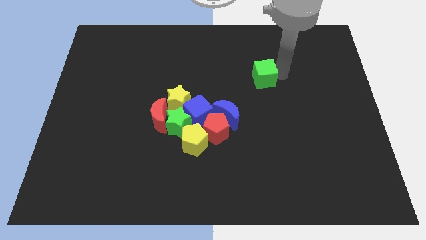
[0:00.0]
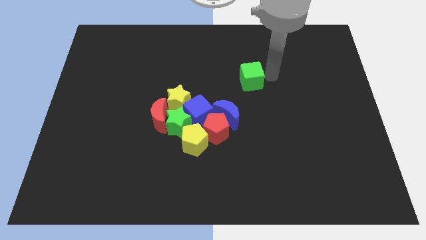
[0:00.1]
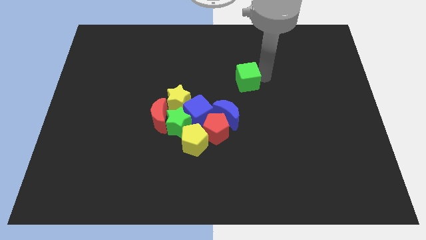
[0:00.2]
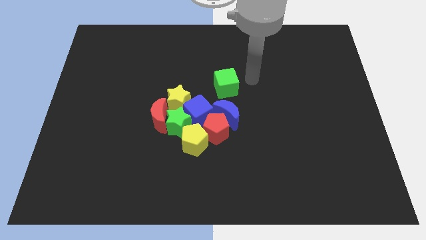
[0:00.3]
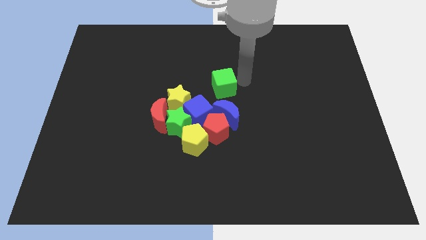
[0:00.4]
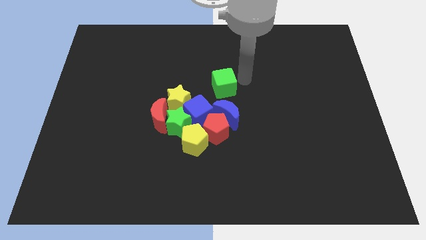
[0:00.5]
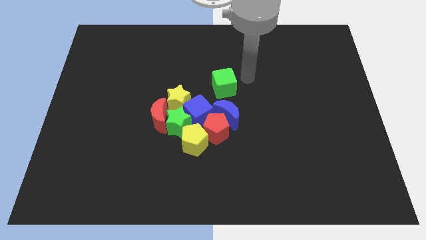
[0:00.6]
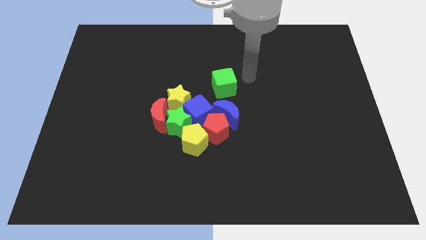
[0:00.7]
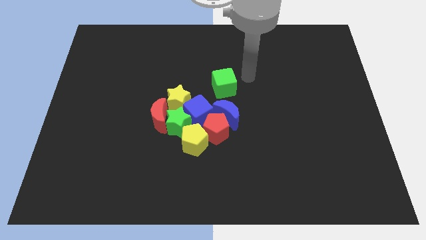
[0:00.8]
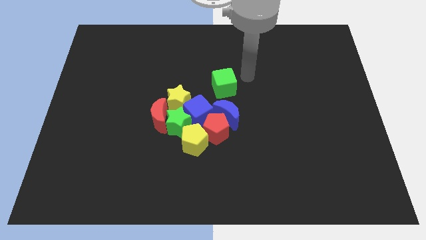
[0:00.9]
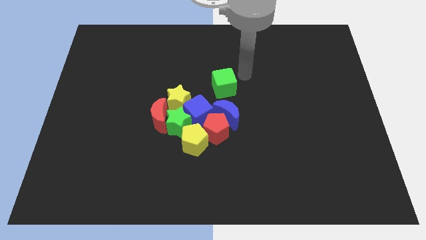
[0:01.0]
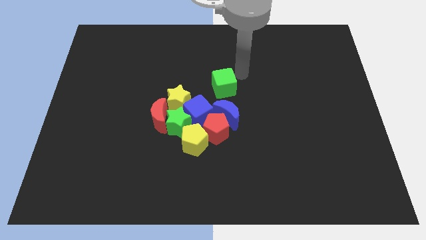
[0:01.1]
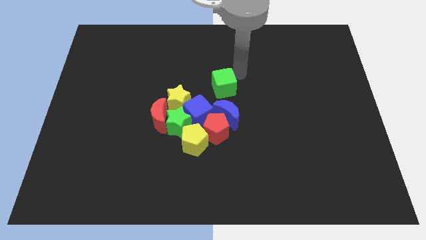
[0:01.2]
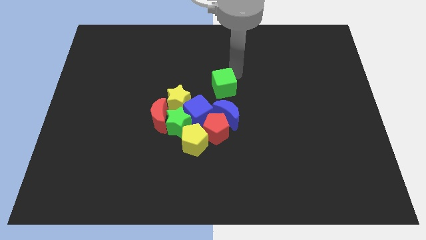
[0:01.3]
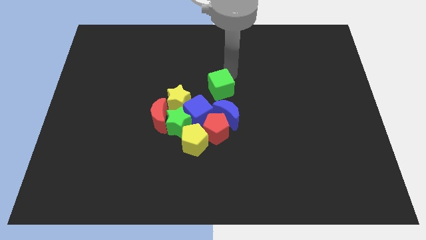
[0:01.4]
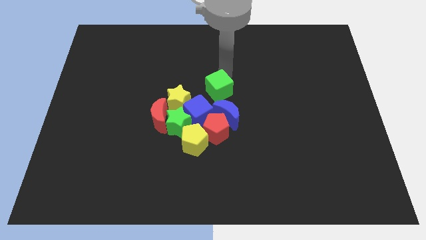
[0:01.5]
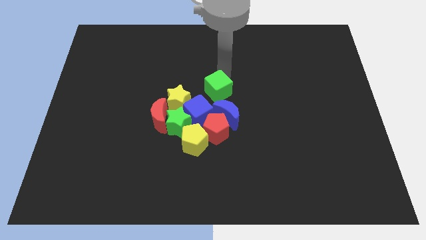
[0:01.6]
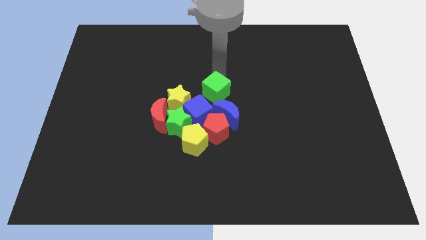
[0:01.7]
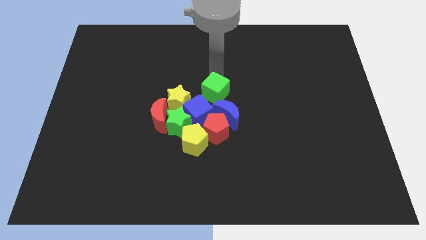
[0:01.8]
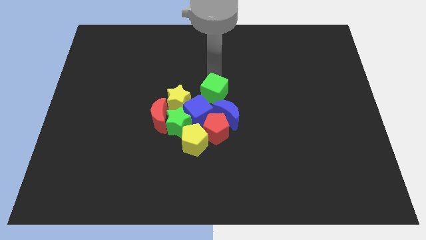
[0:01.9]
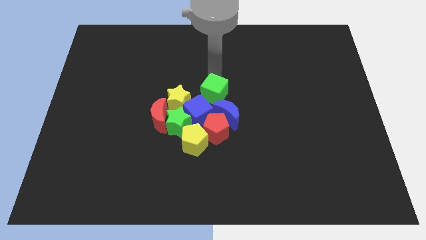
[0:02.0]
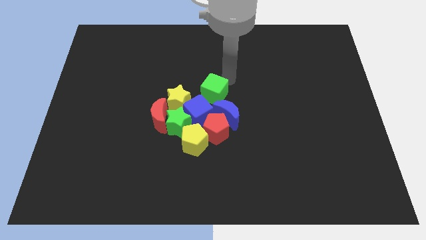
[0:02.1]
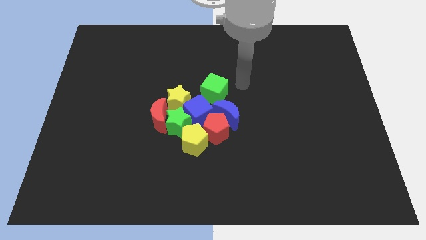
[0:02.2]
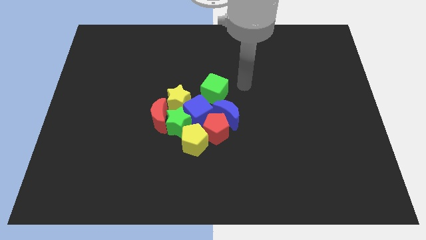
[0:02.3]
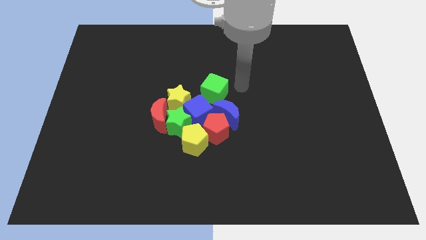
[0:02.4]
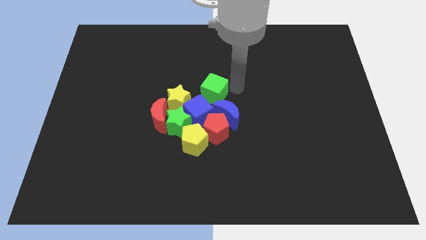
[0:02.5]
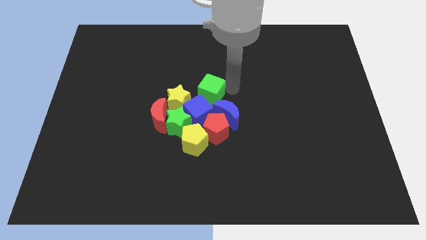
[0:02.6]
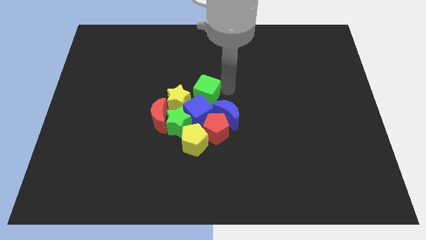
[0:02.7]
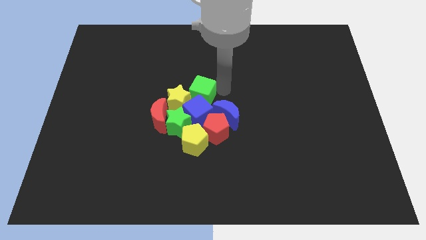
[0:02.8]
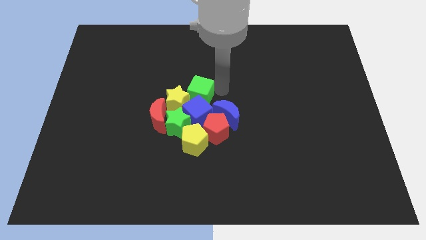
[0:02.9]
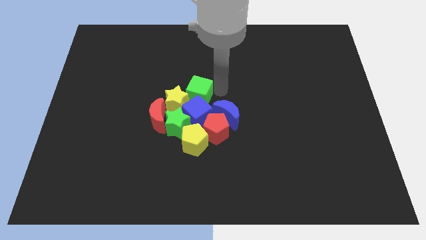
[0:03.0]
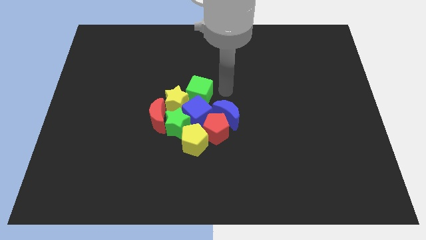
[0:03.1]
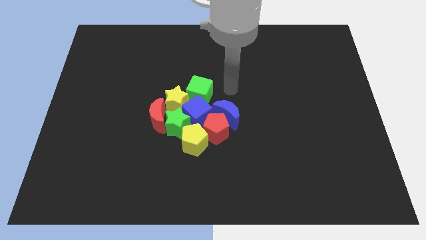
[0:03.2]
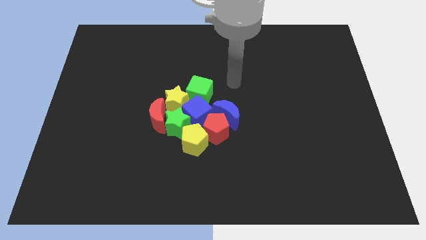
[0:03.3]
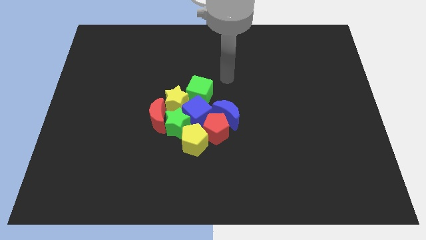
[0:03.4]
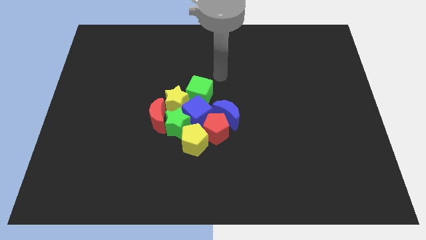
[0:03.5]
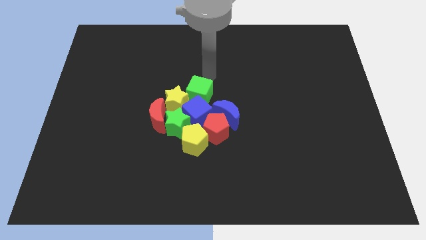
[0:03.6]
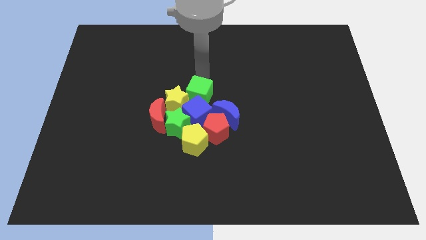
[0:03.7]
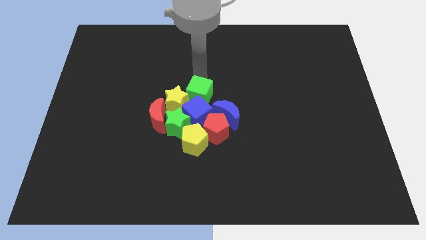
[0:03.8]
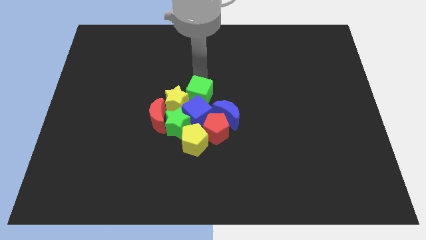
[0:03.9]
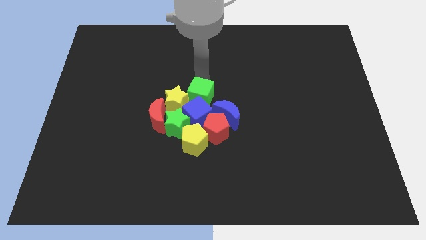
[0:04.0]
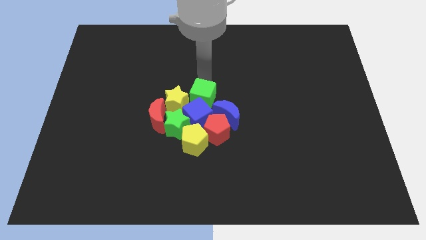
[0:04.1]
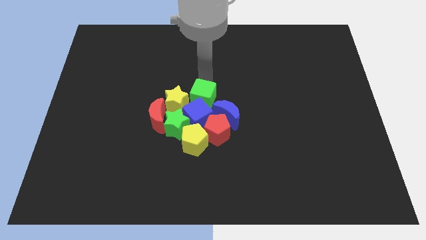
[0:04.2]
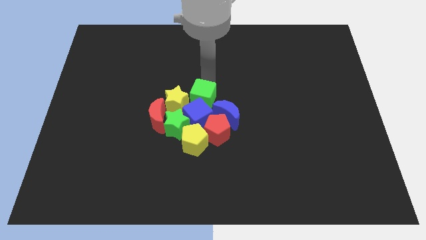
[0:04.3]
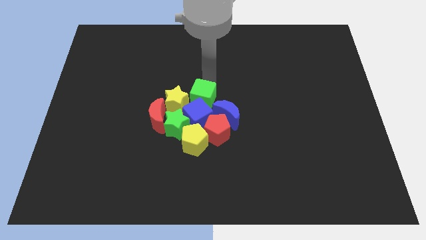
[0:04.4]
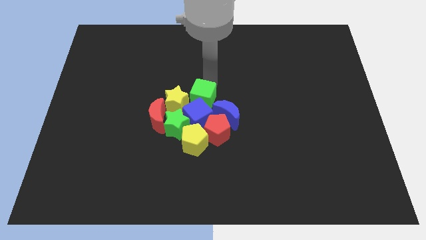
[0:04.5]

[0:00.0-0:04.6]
push the green cube to the group of blocks

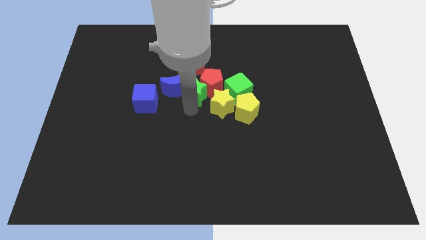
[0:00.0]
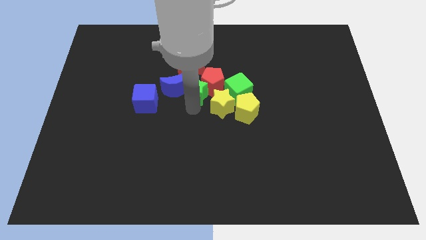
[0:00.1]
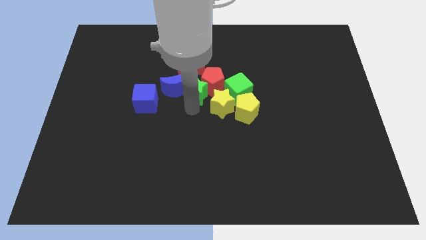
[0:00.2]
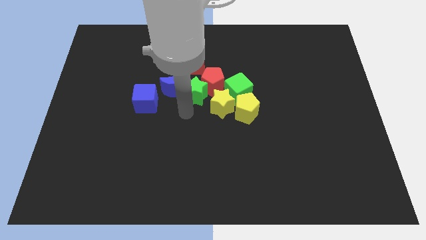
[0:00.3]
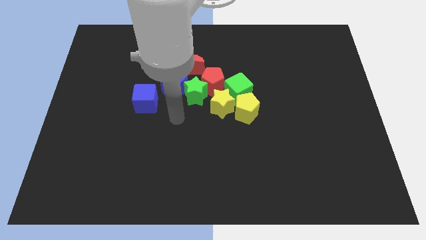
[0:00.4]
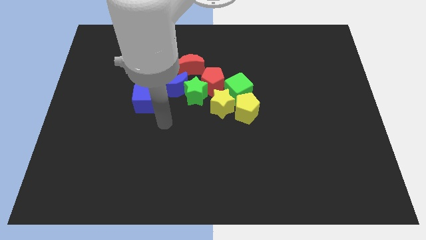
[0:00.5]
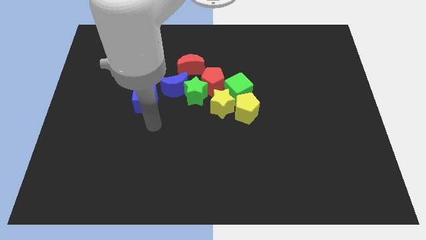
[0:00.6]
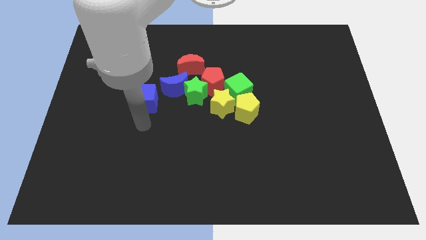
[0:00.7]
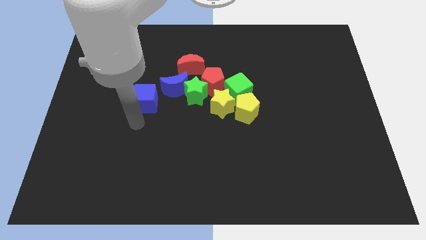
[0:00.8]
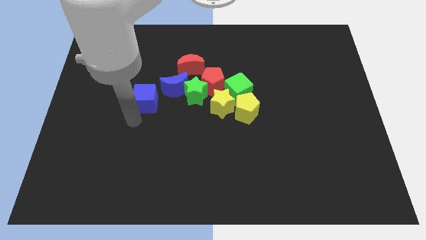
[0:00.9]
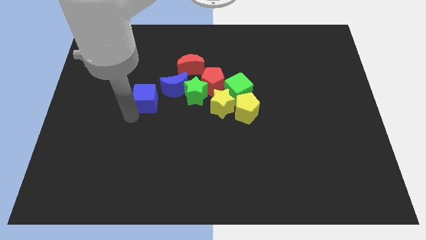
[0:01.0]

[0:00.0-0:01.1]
move your arm away from the green star

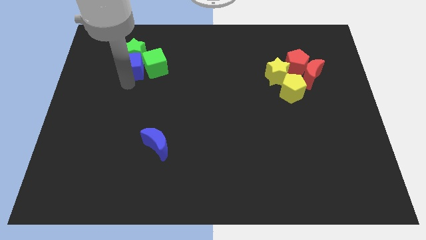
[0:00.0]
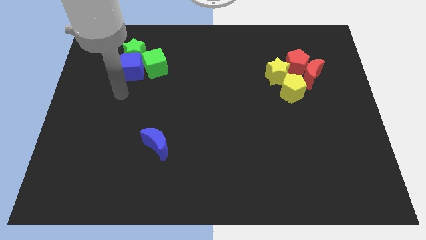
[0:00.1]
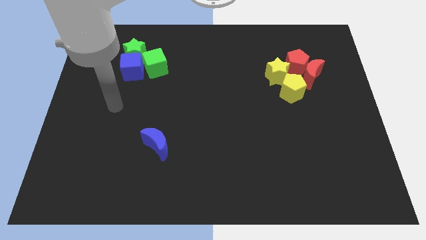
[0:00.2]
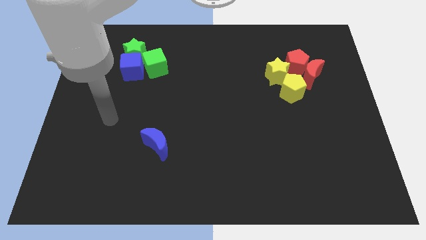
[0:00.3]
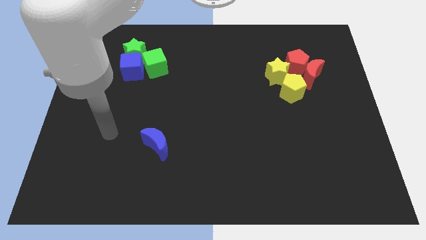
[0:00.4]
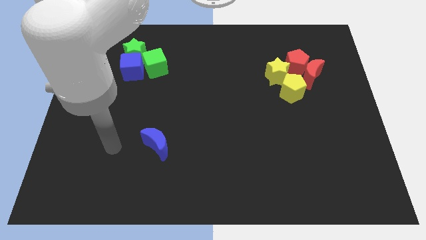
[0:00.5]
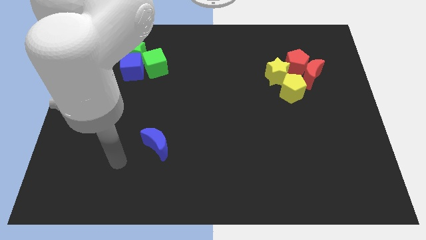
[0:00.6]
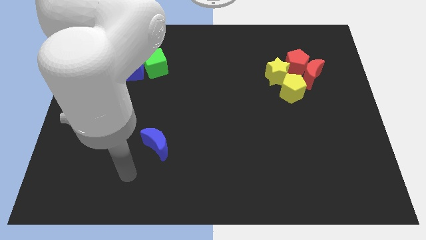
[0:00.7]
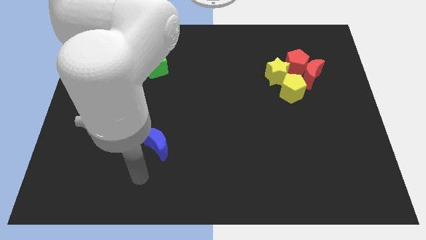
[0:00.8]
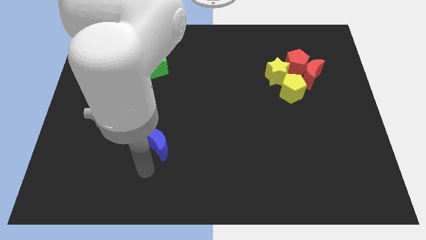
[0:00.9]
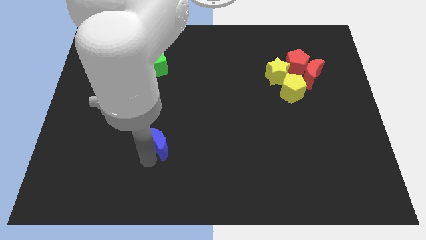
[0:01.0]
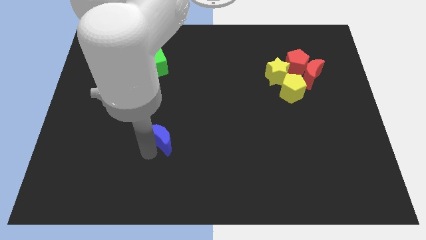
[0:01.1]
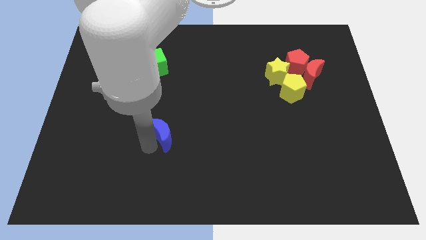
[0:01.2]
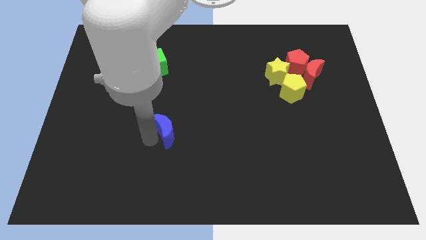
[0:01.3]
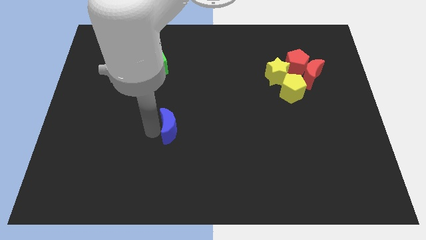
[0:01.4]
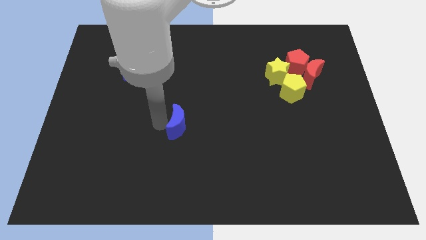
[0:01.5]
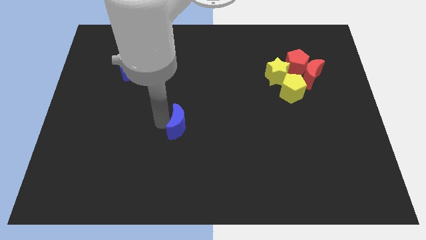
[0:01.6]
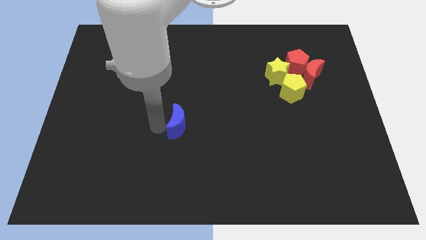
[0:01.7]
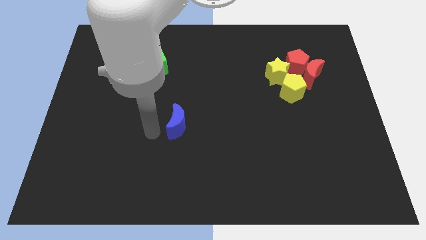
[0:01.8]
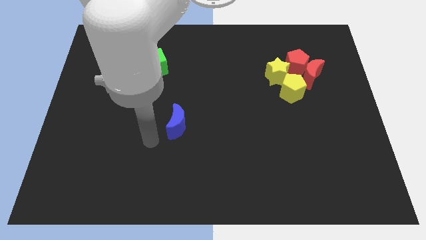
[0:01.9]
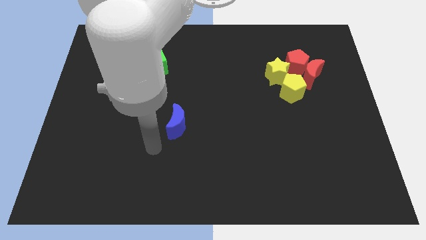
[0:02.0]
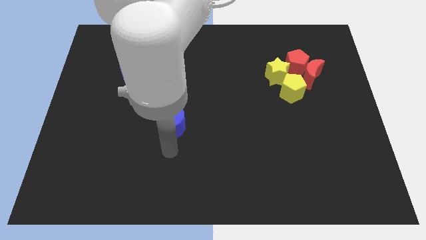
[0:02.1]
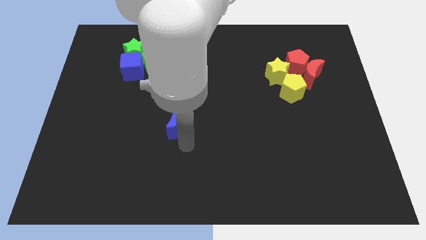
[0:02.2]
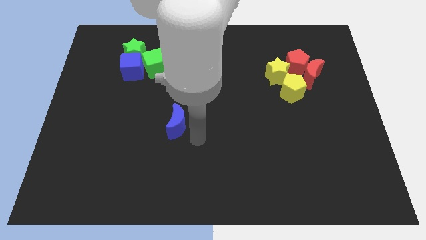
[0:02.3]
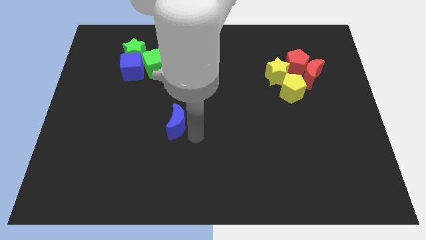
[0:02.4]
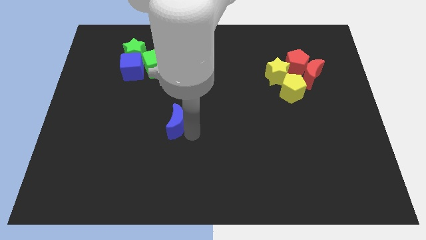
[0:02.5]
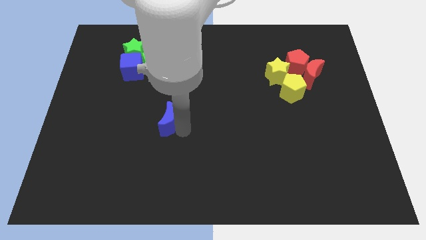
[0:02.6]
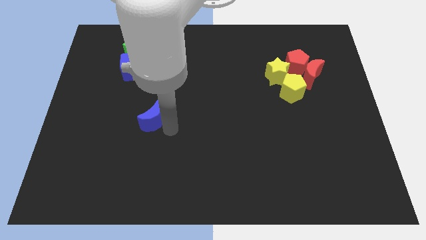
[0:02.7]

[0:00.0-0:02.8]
move your arm away from the blue cube

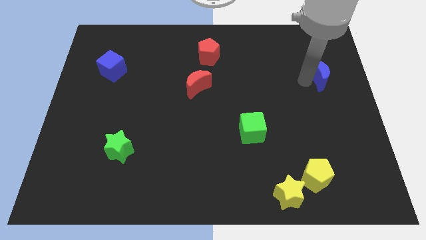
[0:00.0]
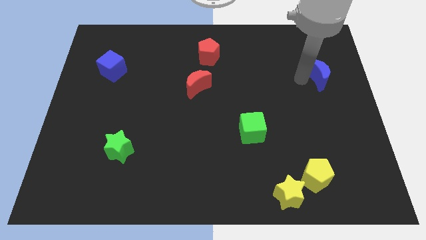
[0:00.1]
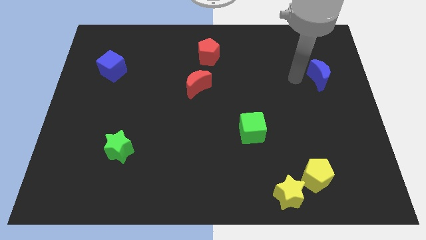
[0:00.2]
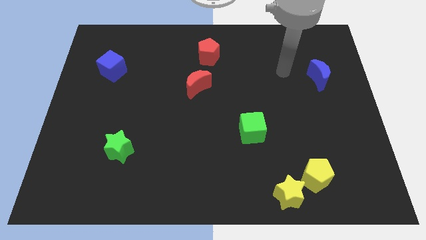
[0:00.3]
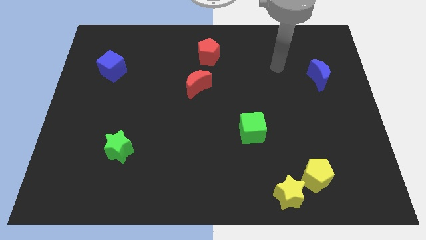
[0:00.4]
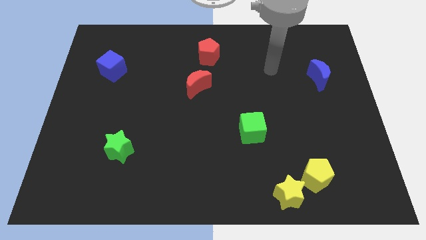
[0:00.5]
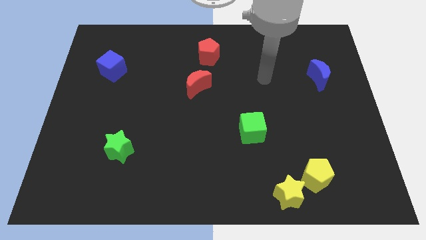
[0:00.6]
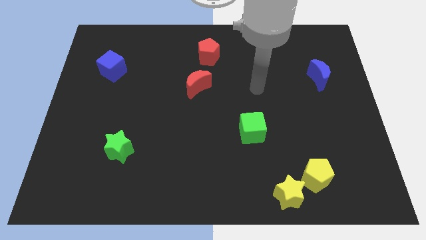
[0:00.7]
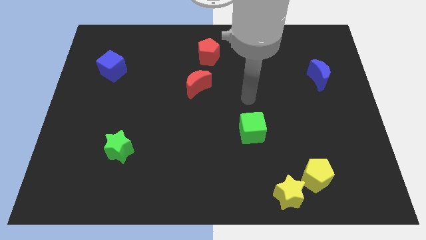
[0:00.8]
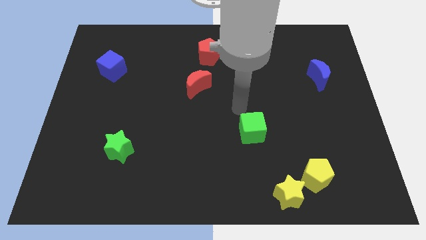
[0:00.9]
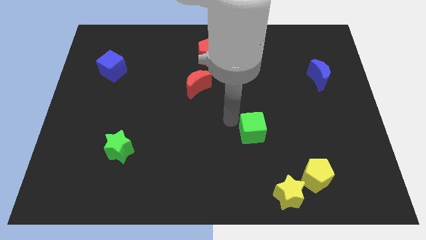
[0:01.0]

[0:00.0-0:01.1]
move your arm to the top left of green cube
